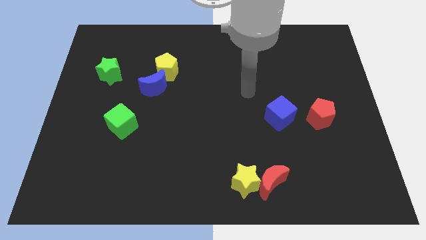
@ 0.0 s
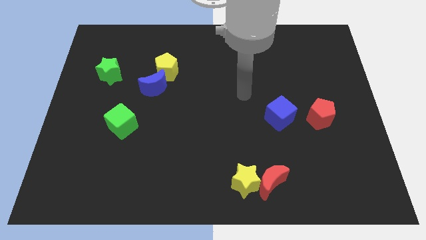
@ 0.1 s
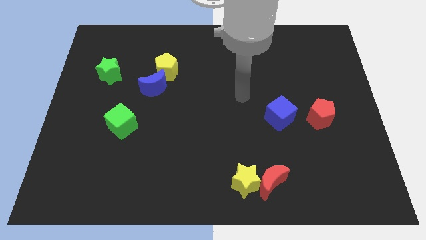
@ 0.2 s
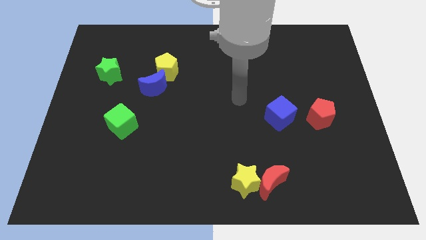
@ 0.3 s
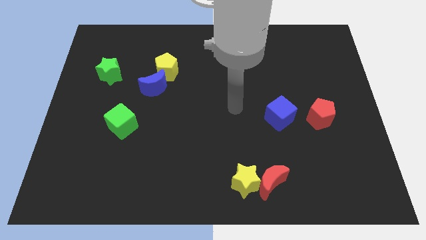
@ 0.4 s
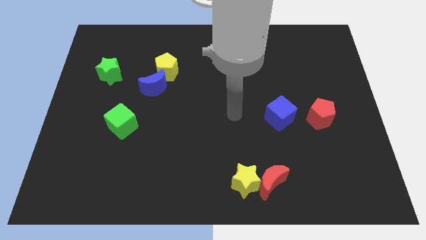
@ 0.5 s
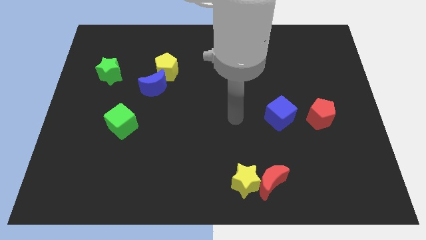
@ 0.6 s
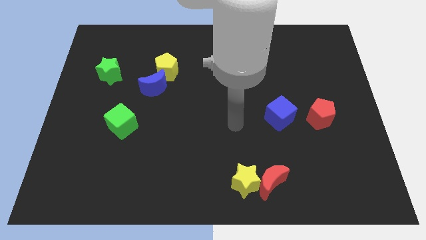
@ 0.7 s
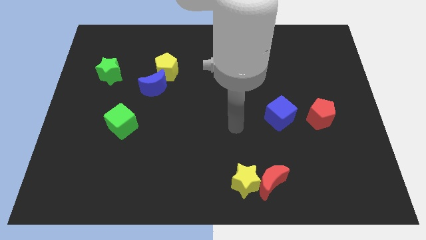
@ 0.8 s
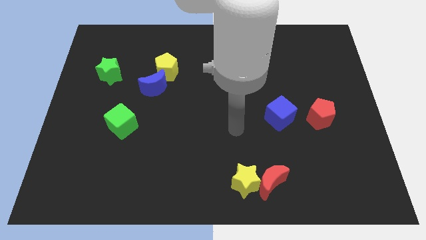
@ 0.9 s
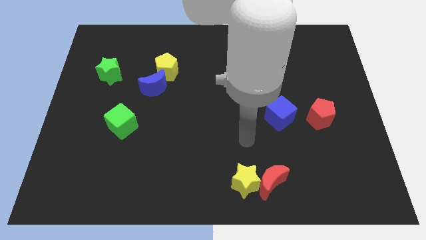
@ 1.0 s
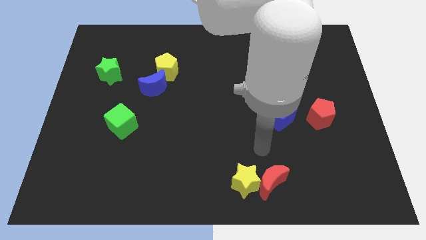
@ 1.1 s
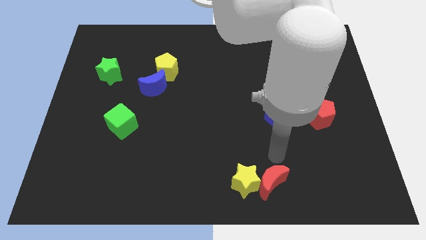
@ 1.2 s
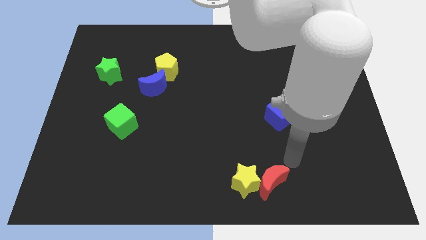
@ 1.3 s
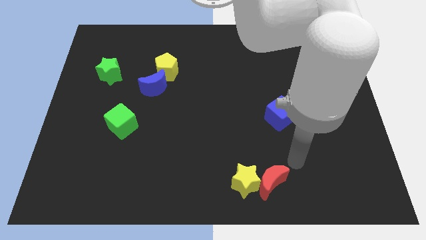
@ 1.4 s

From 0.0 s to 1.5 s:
move arm right above the red moon

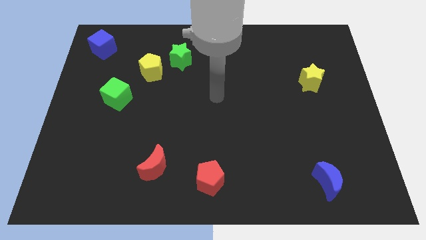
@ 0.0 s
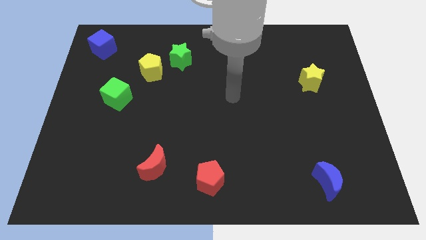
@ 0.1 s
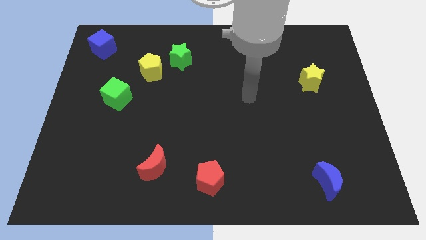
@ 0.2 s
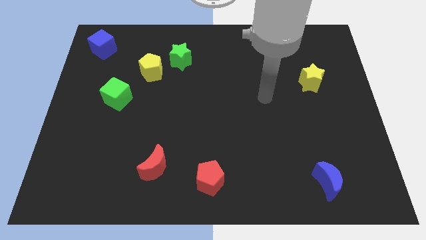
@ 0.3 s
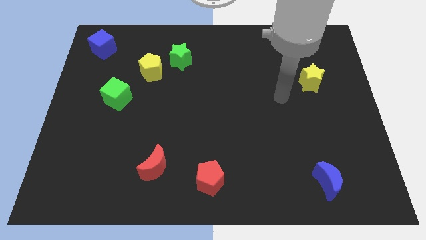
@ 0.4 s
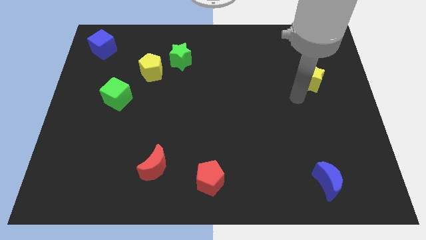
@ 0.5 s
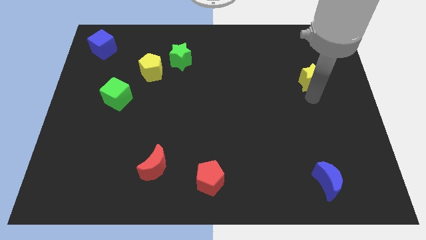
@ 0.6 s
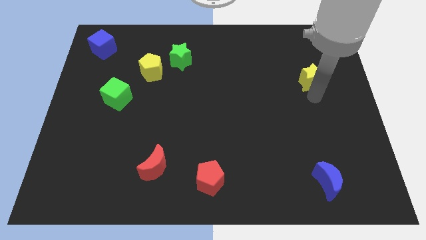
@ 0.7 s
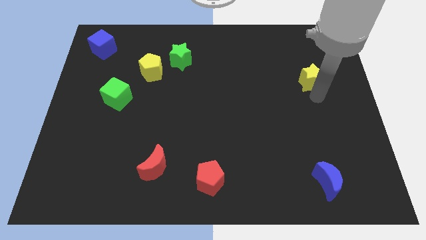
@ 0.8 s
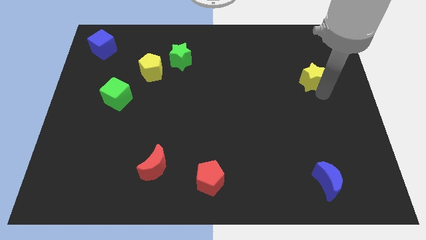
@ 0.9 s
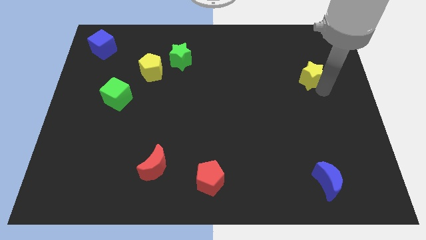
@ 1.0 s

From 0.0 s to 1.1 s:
touch the yellow star

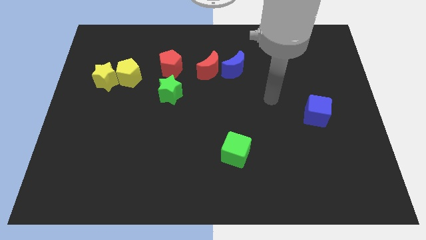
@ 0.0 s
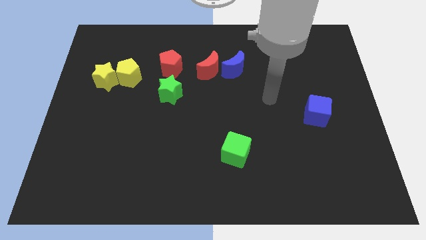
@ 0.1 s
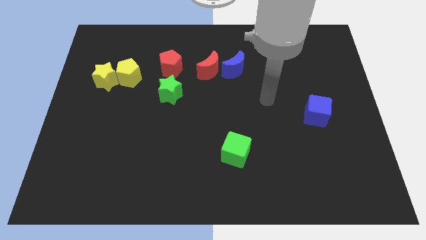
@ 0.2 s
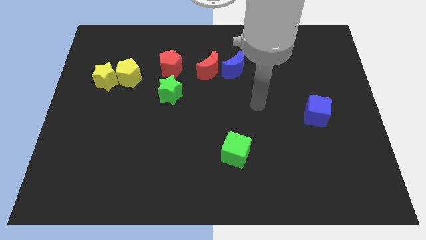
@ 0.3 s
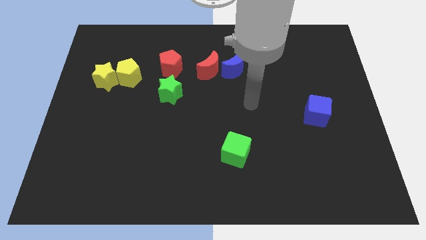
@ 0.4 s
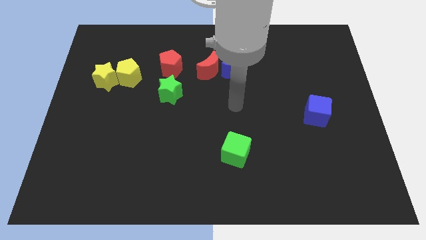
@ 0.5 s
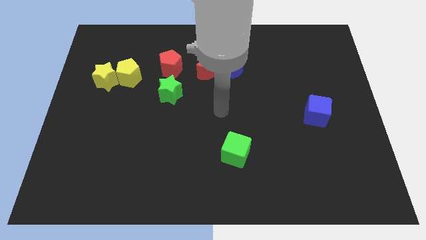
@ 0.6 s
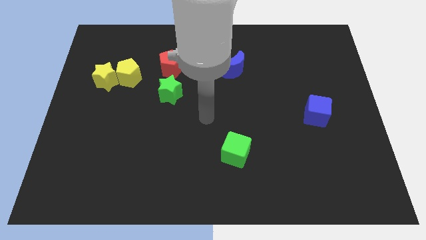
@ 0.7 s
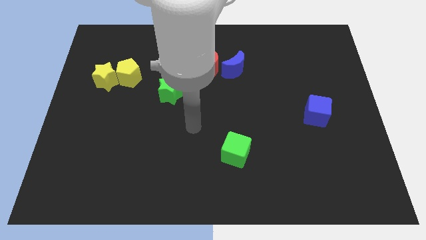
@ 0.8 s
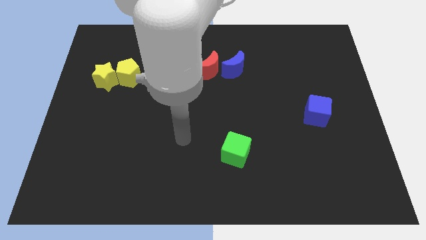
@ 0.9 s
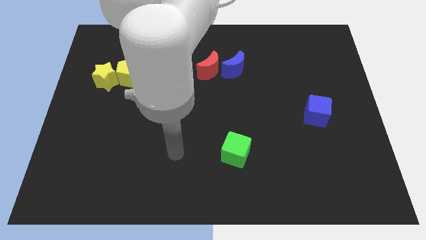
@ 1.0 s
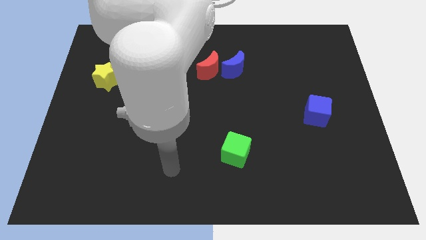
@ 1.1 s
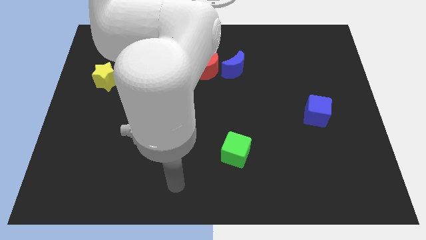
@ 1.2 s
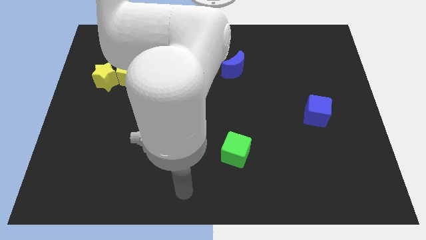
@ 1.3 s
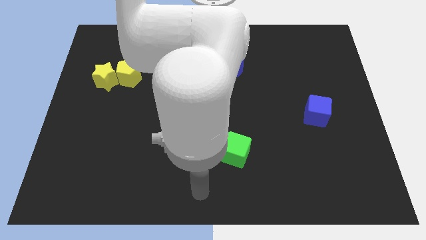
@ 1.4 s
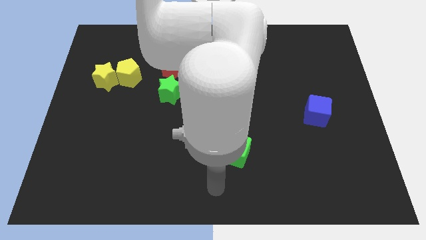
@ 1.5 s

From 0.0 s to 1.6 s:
move your hand to the bottom side of the green cube

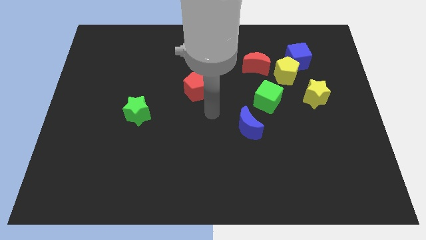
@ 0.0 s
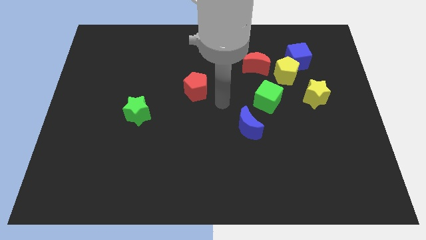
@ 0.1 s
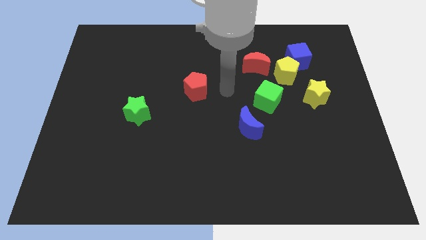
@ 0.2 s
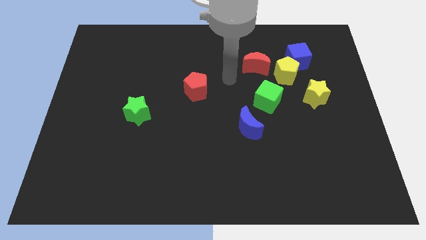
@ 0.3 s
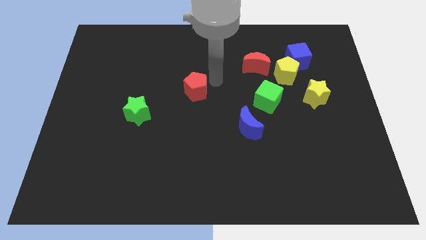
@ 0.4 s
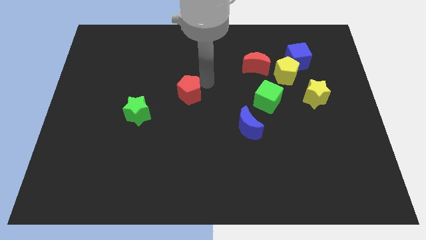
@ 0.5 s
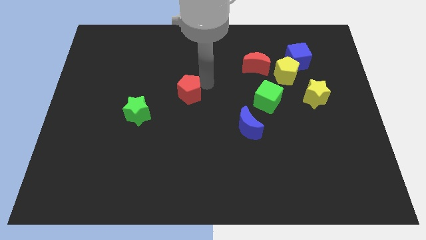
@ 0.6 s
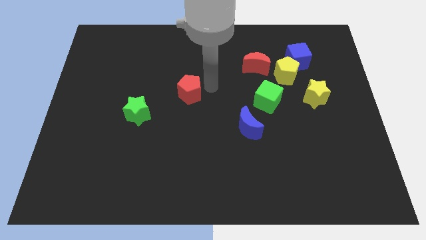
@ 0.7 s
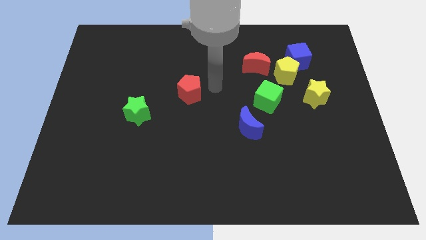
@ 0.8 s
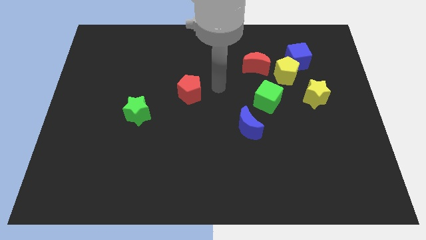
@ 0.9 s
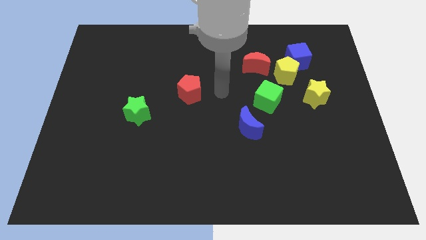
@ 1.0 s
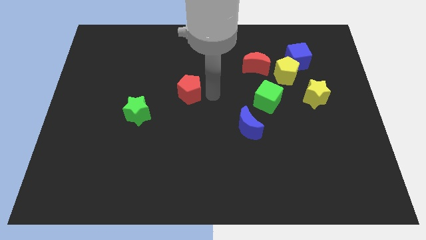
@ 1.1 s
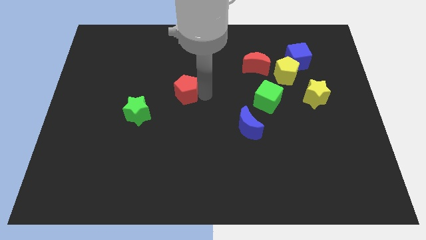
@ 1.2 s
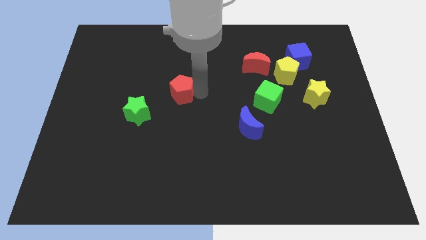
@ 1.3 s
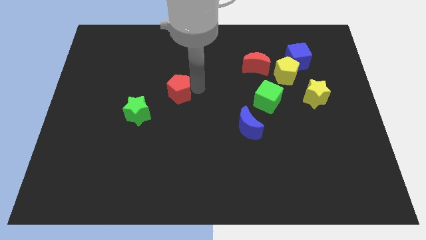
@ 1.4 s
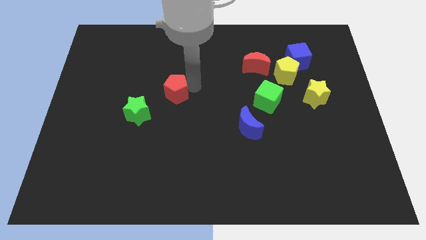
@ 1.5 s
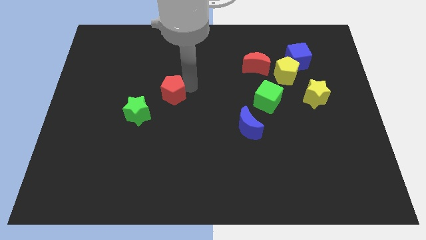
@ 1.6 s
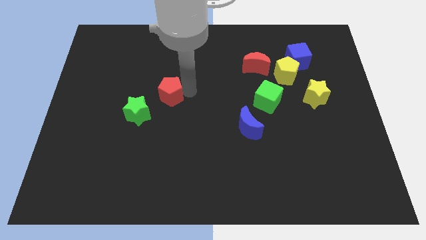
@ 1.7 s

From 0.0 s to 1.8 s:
move the red pentagon close to the green star

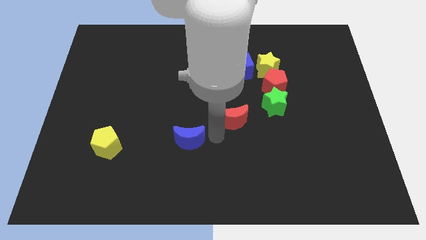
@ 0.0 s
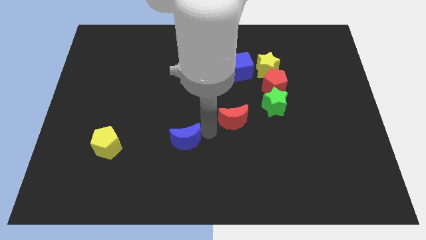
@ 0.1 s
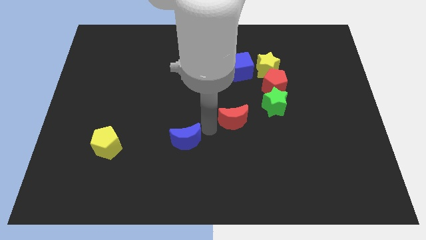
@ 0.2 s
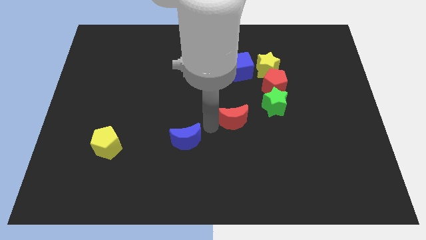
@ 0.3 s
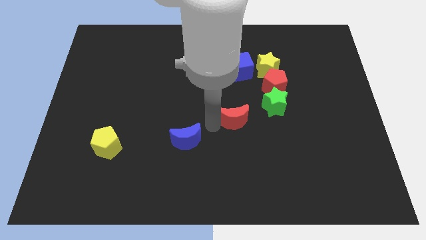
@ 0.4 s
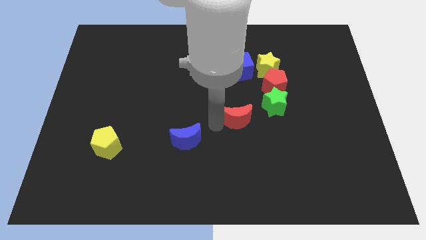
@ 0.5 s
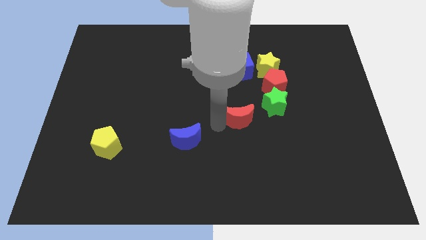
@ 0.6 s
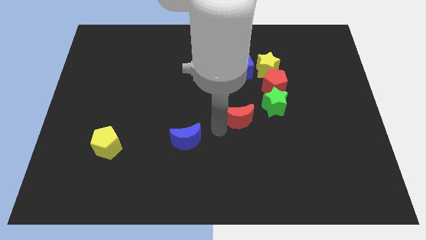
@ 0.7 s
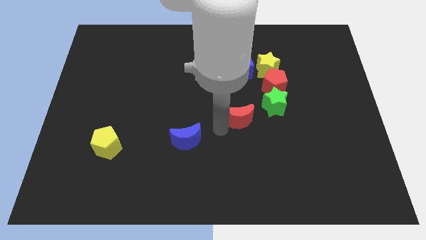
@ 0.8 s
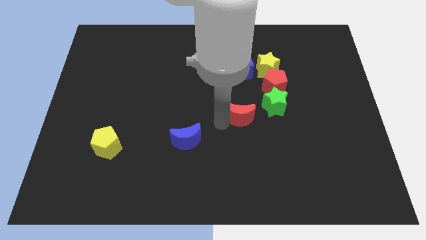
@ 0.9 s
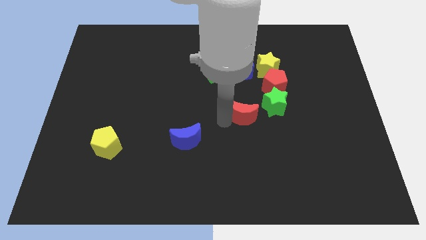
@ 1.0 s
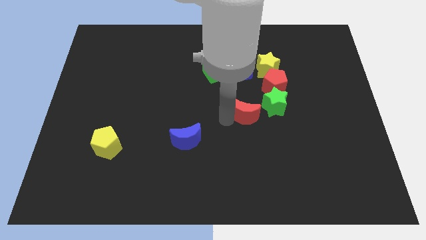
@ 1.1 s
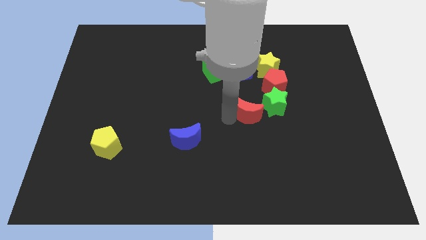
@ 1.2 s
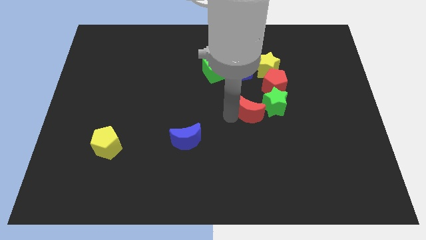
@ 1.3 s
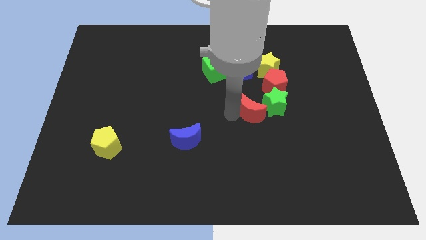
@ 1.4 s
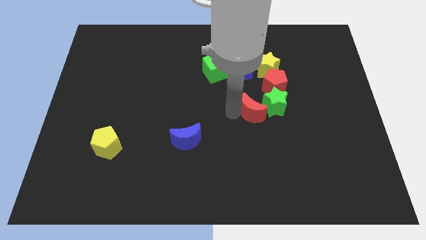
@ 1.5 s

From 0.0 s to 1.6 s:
move the red moon close to the left side of the green star

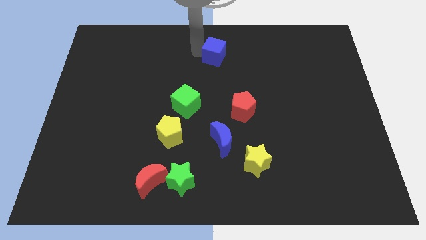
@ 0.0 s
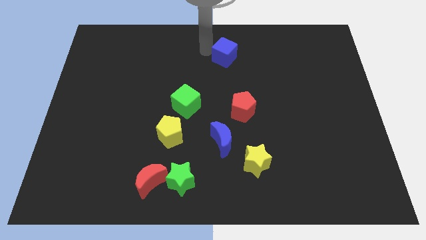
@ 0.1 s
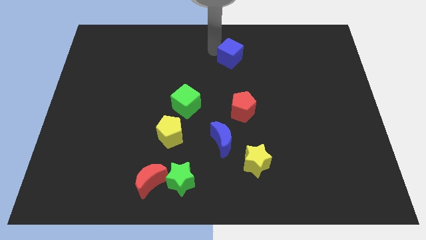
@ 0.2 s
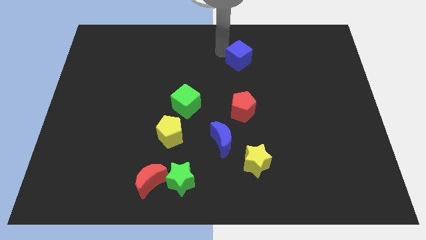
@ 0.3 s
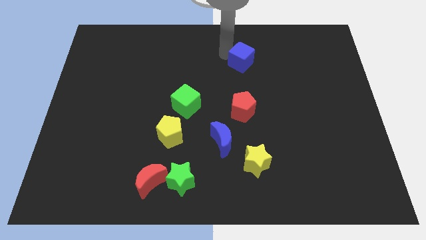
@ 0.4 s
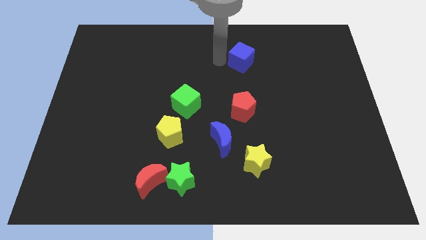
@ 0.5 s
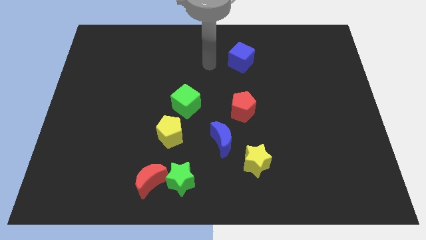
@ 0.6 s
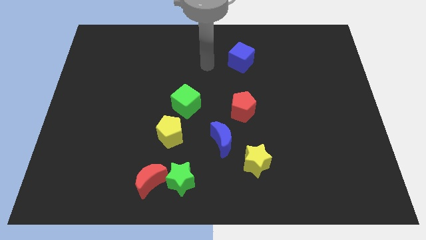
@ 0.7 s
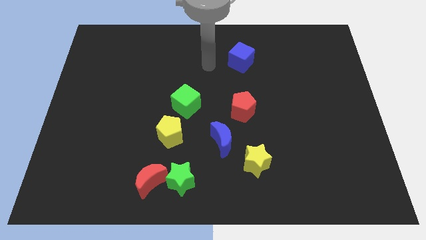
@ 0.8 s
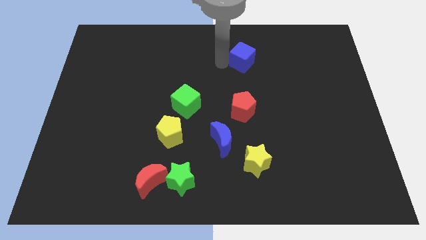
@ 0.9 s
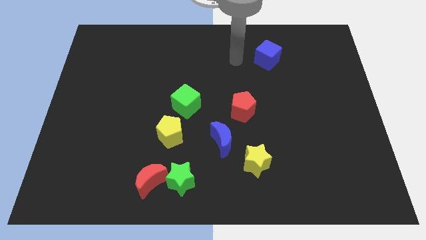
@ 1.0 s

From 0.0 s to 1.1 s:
place your arm to the left of the blue cube

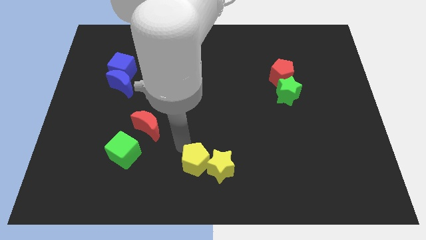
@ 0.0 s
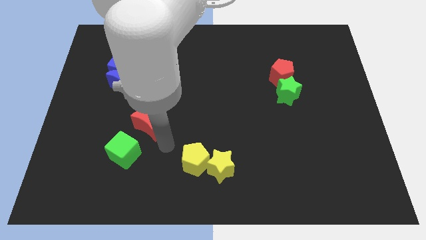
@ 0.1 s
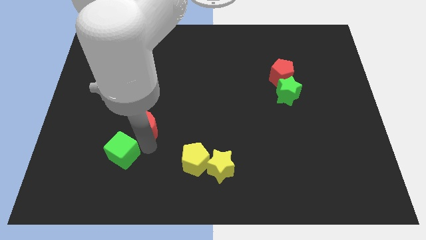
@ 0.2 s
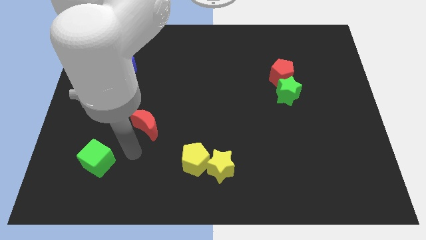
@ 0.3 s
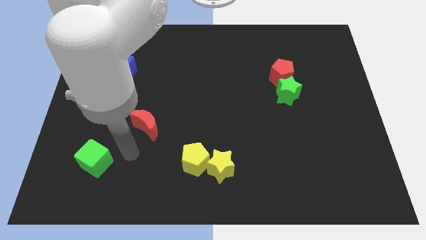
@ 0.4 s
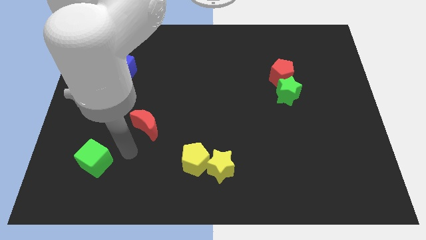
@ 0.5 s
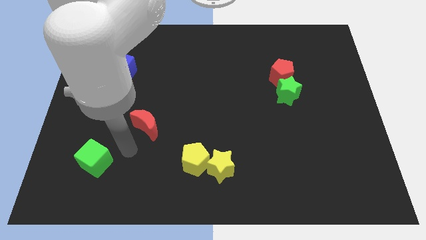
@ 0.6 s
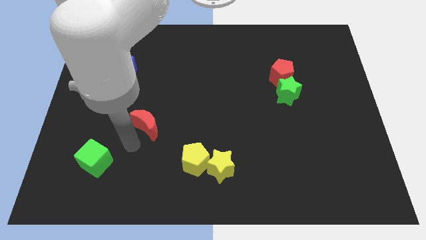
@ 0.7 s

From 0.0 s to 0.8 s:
push the green cube towards the left side of the board
